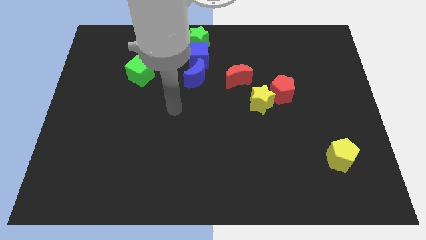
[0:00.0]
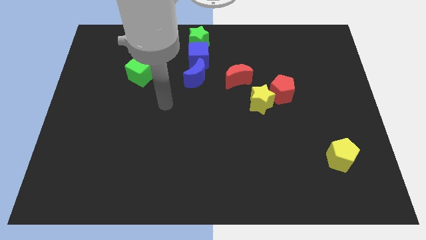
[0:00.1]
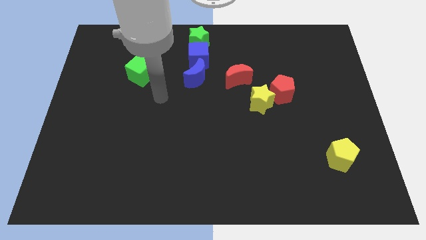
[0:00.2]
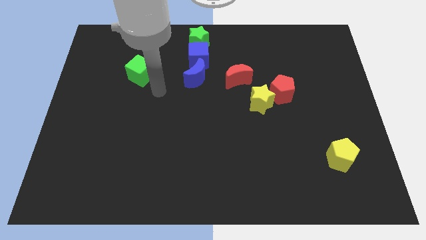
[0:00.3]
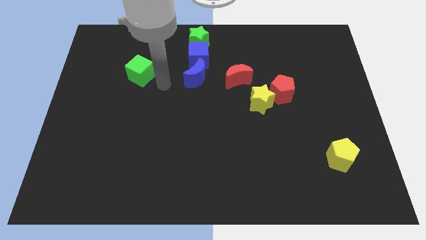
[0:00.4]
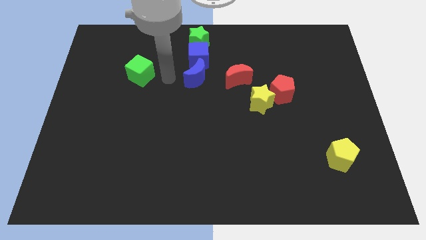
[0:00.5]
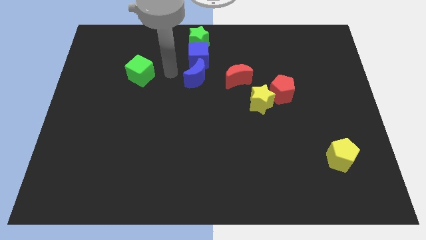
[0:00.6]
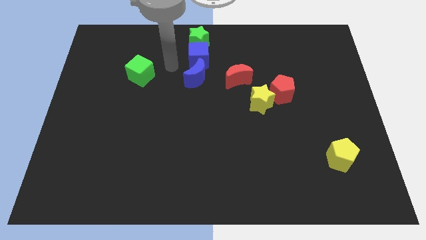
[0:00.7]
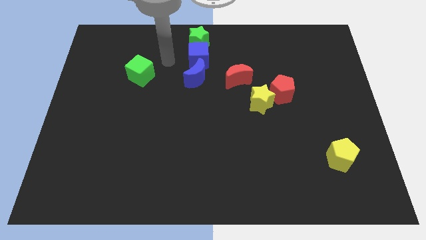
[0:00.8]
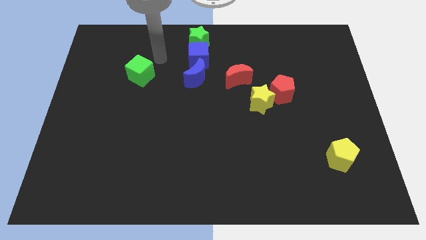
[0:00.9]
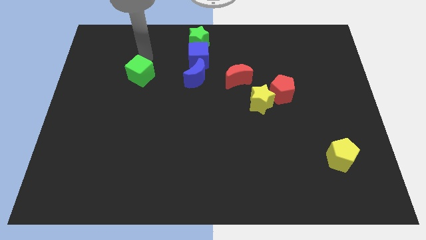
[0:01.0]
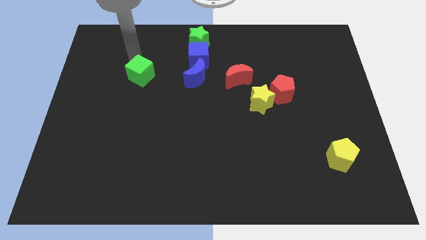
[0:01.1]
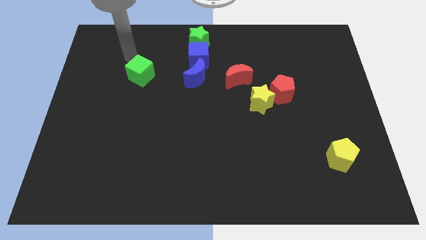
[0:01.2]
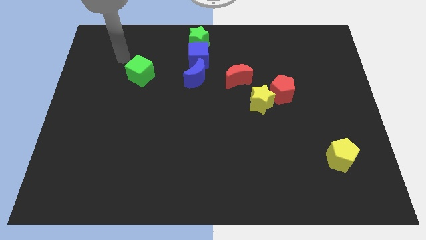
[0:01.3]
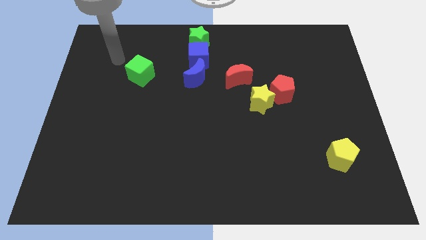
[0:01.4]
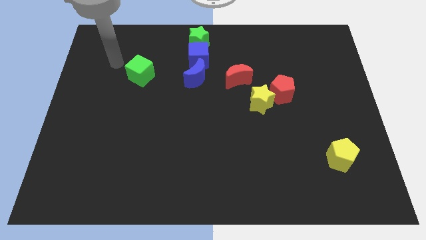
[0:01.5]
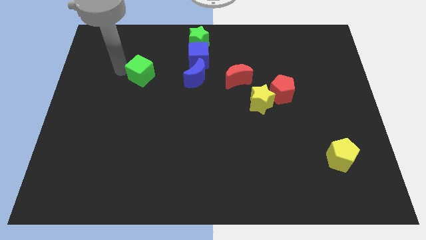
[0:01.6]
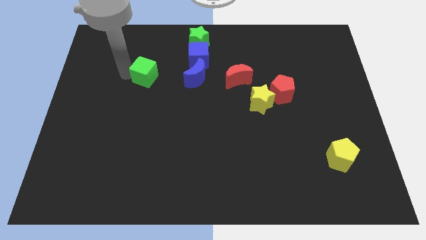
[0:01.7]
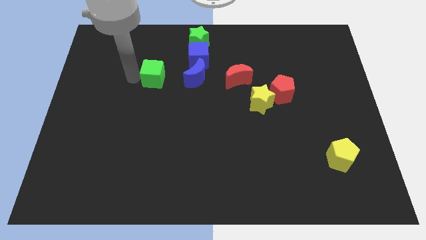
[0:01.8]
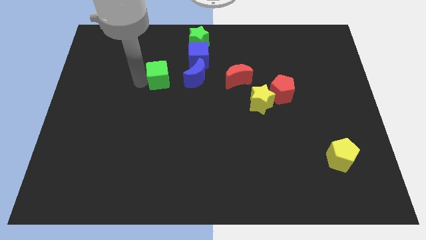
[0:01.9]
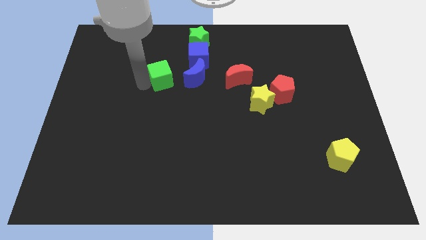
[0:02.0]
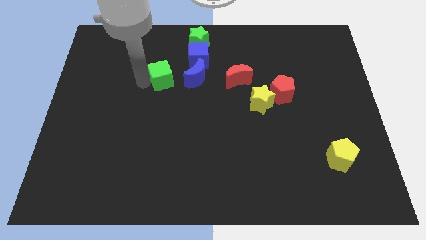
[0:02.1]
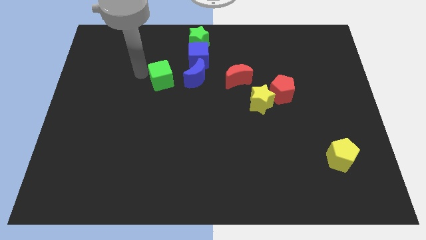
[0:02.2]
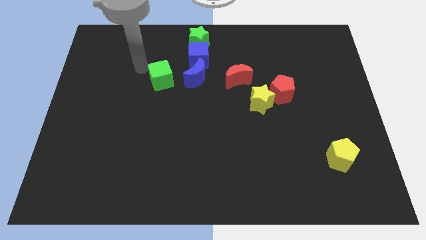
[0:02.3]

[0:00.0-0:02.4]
move the green cube near to the left of the blue moon

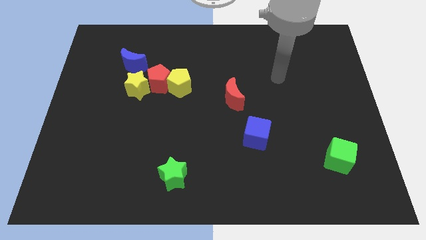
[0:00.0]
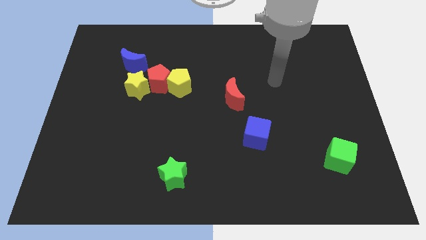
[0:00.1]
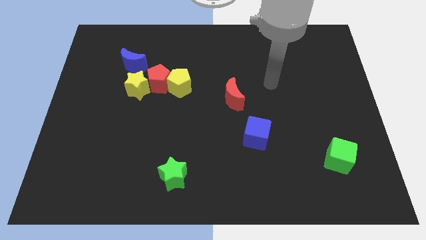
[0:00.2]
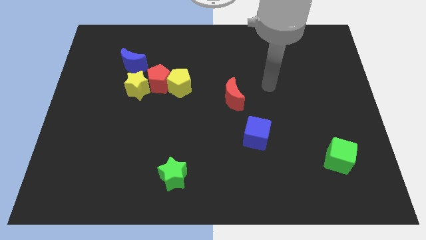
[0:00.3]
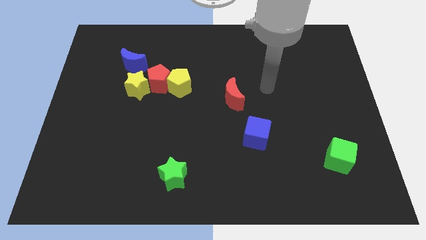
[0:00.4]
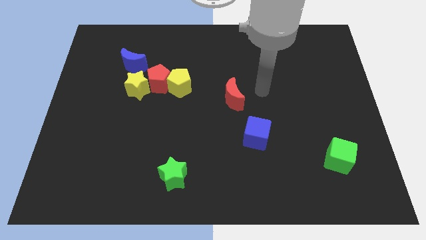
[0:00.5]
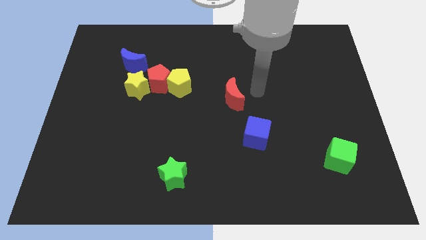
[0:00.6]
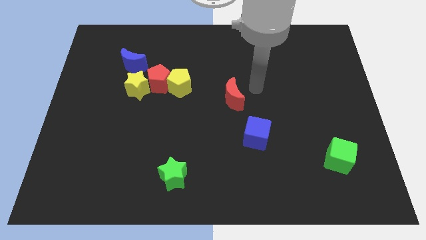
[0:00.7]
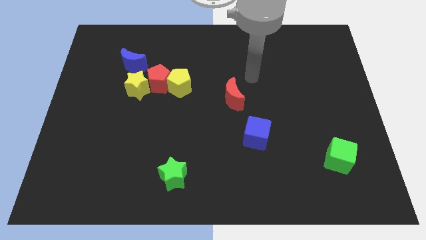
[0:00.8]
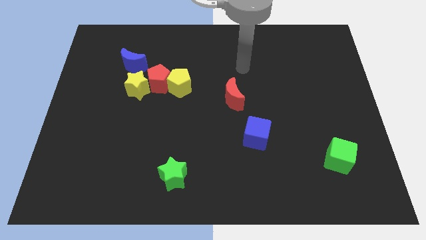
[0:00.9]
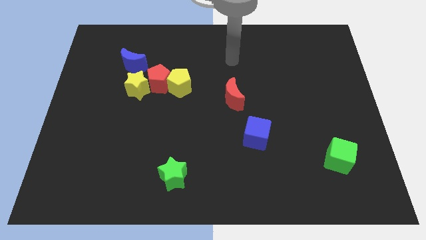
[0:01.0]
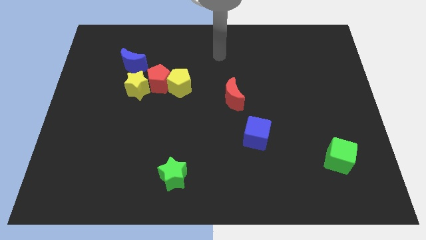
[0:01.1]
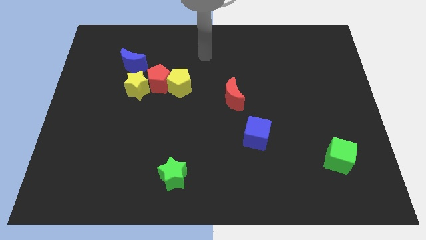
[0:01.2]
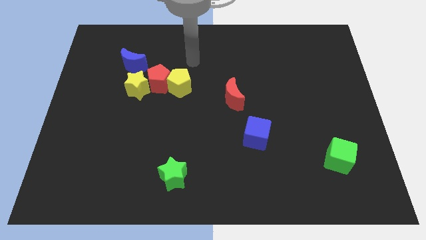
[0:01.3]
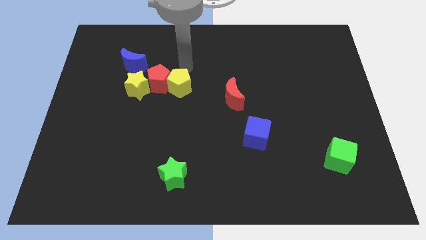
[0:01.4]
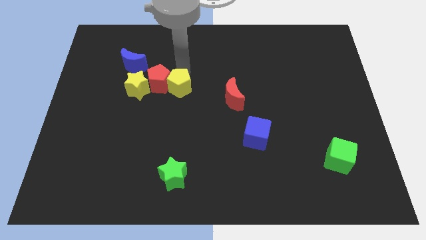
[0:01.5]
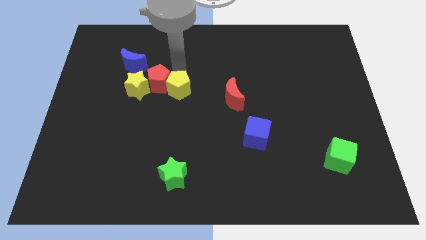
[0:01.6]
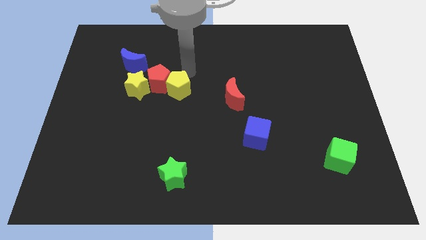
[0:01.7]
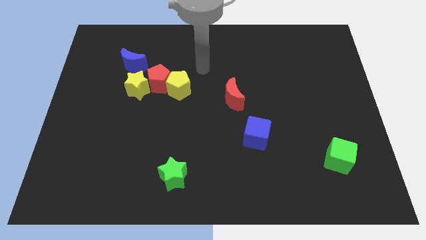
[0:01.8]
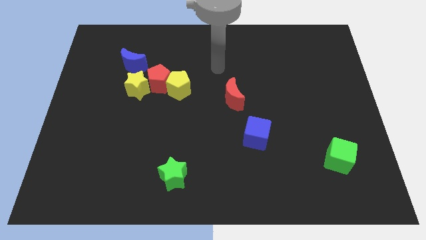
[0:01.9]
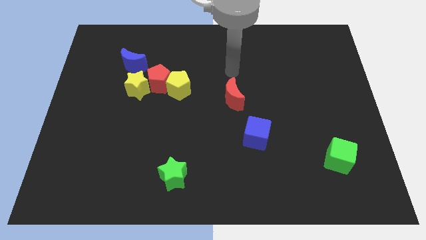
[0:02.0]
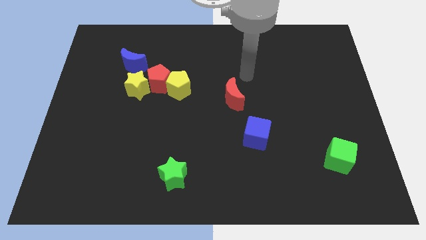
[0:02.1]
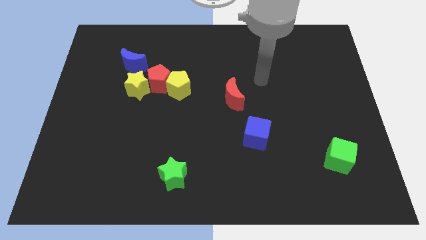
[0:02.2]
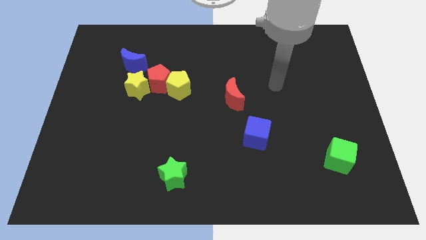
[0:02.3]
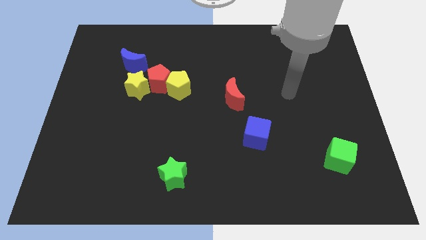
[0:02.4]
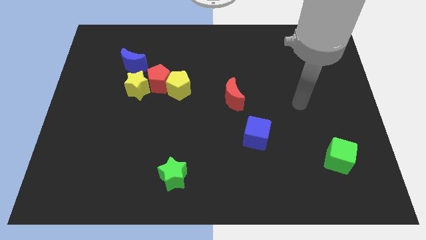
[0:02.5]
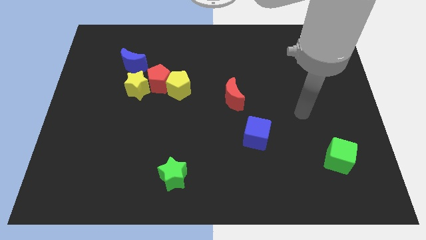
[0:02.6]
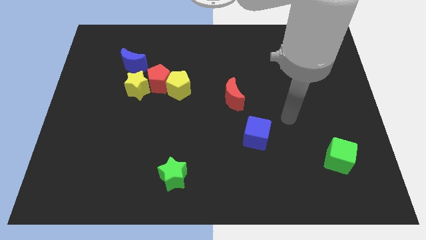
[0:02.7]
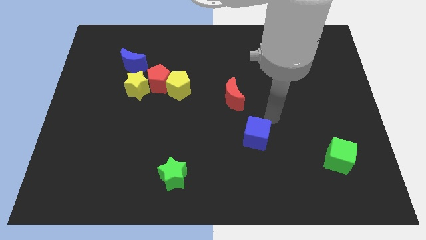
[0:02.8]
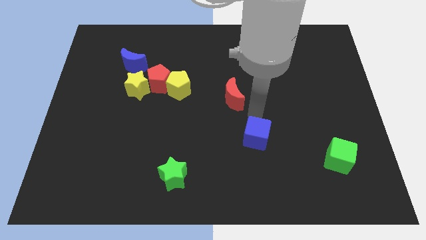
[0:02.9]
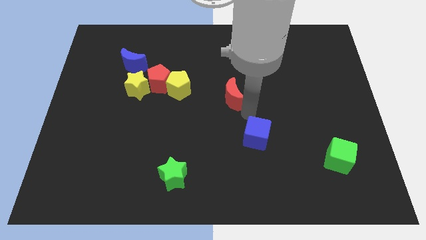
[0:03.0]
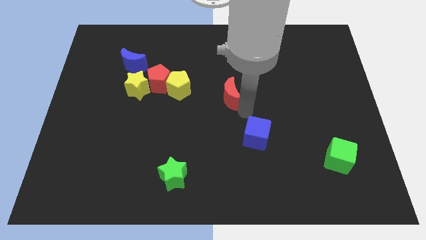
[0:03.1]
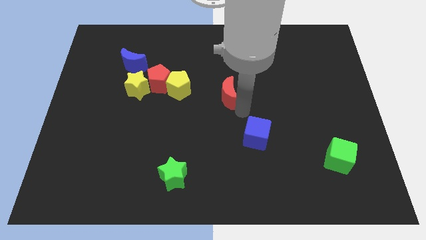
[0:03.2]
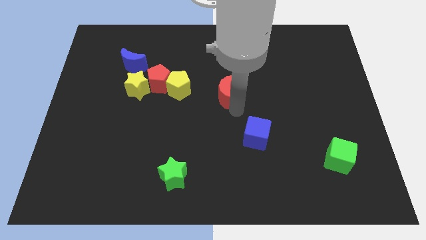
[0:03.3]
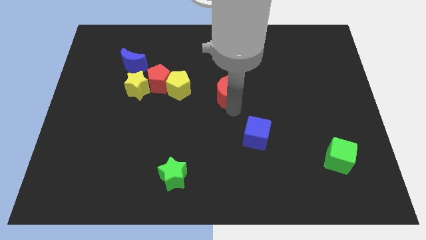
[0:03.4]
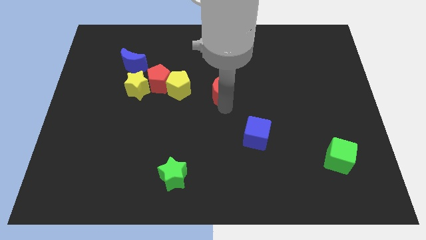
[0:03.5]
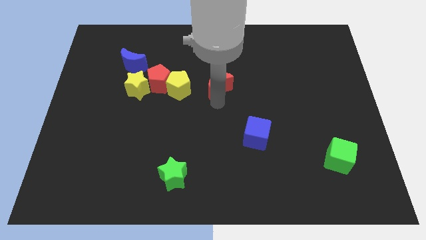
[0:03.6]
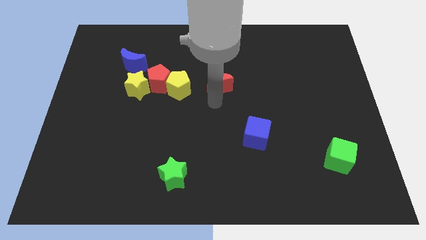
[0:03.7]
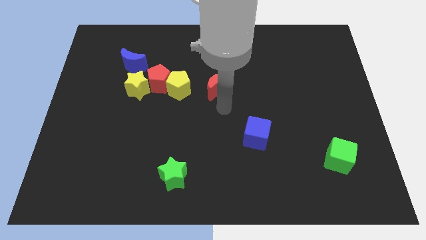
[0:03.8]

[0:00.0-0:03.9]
push the red moon towards the yellow pentagon

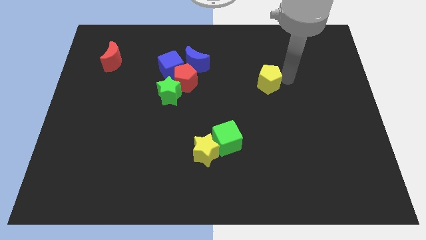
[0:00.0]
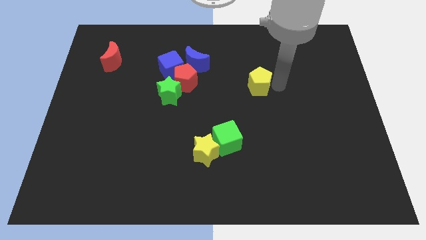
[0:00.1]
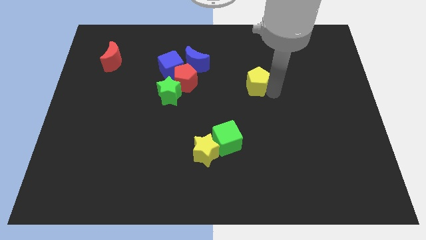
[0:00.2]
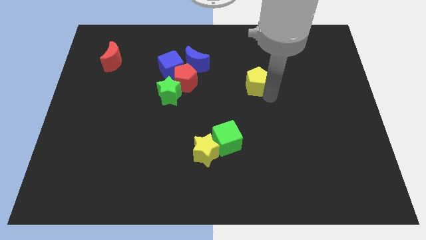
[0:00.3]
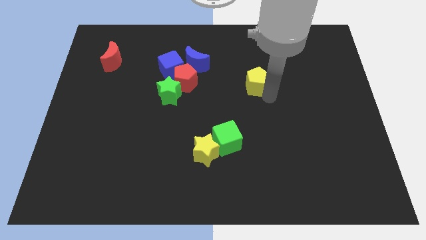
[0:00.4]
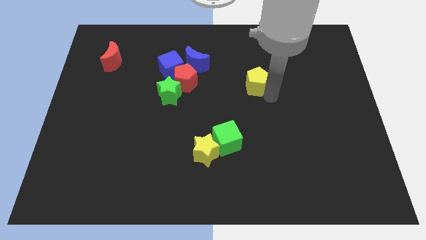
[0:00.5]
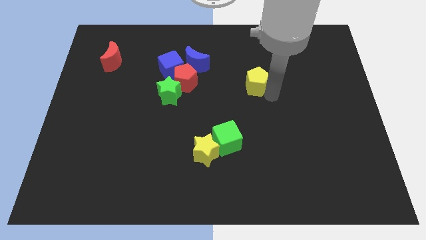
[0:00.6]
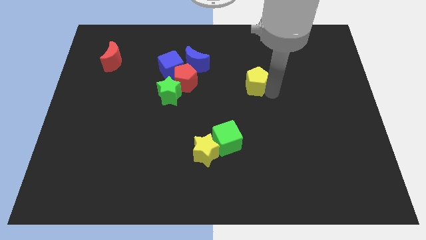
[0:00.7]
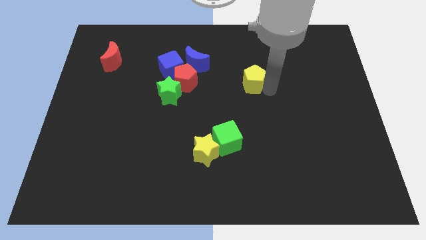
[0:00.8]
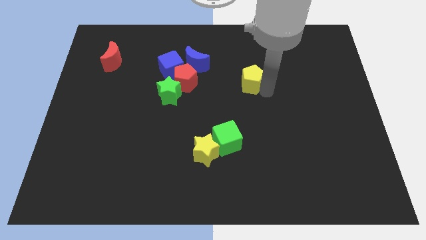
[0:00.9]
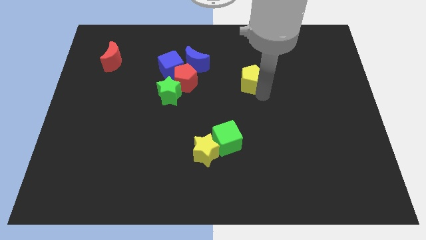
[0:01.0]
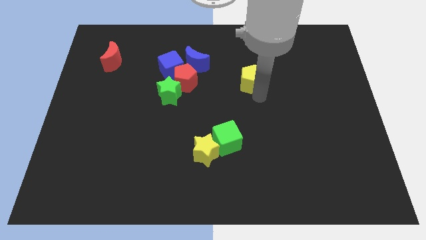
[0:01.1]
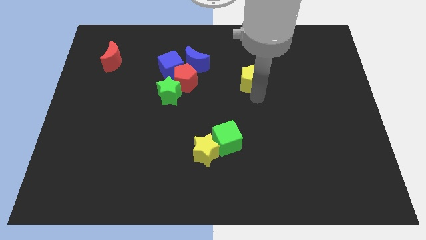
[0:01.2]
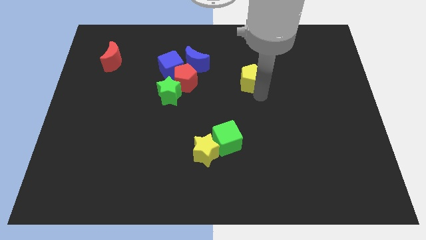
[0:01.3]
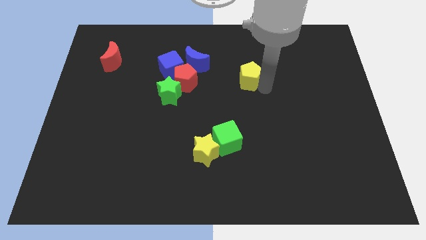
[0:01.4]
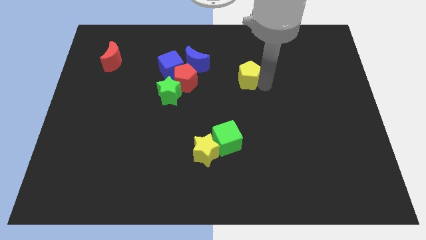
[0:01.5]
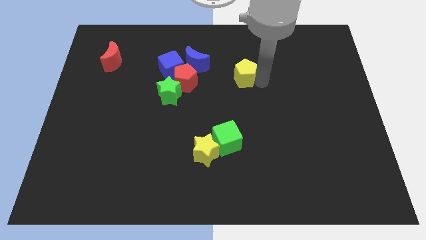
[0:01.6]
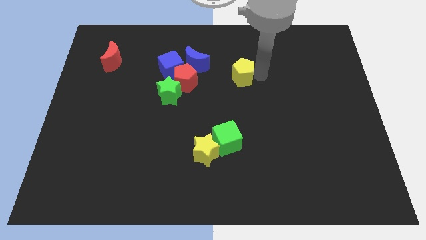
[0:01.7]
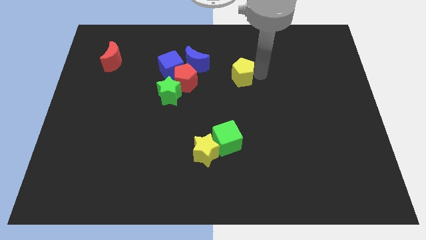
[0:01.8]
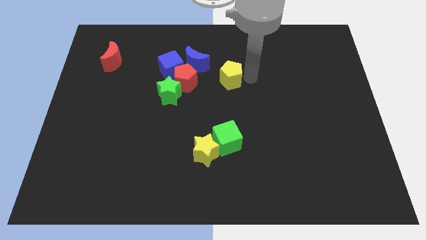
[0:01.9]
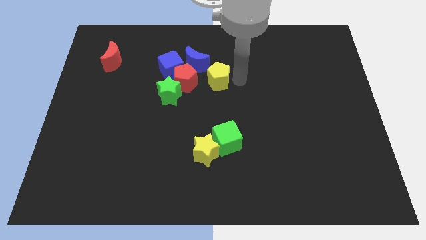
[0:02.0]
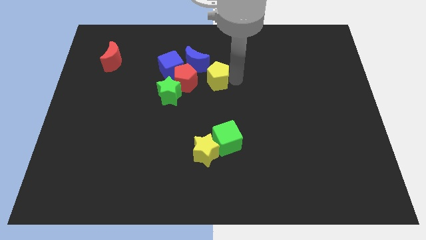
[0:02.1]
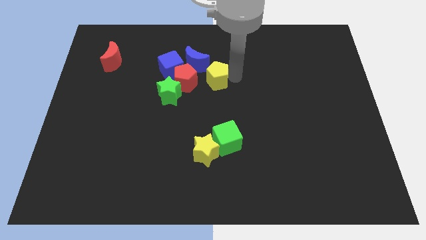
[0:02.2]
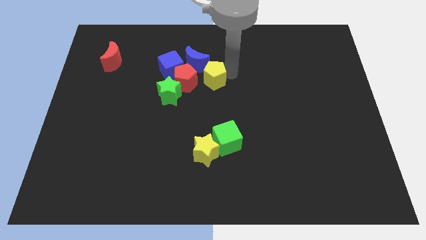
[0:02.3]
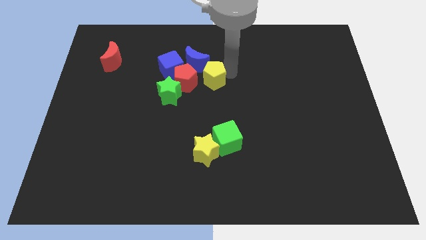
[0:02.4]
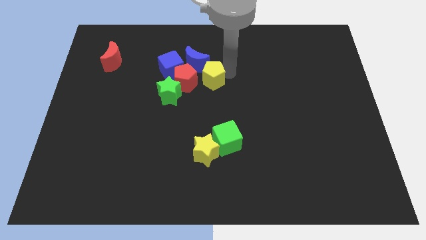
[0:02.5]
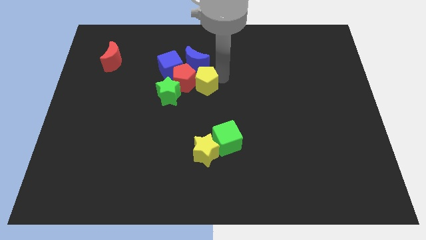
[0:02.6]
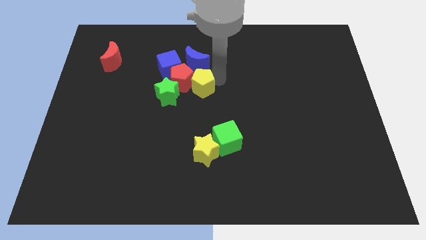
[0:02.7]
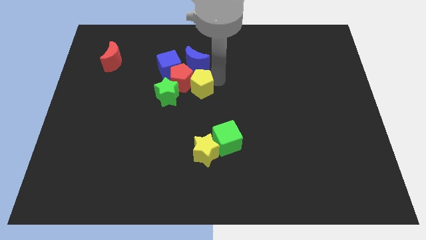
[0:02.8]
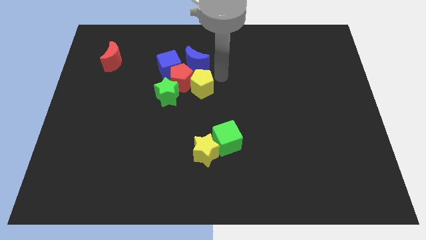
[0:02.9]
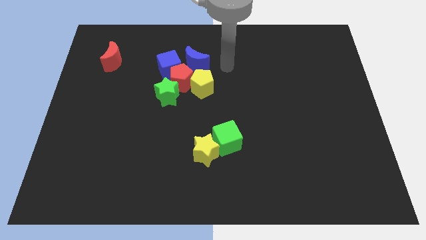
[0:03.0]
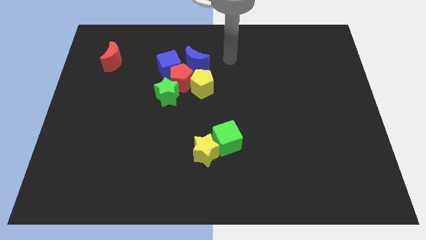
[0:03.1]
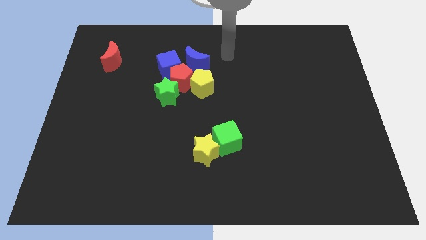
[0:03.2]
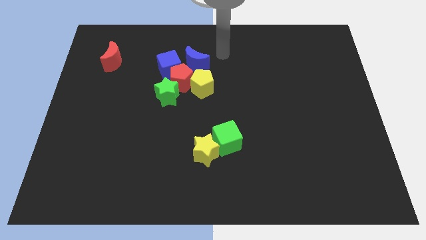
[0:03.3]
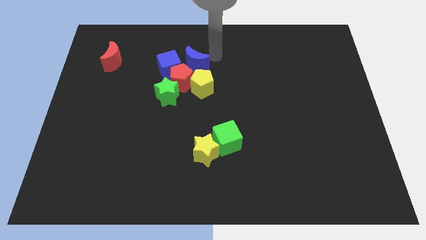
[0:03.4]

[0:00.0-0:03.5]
push the yellow pentagon into the red pentagon
